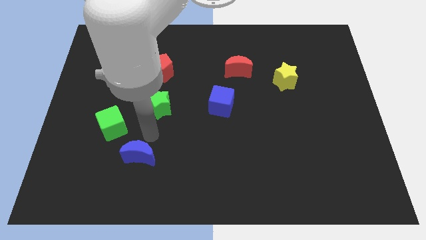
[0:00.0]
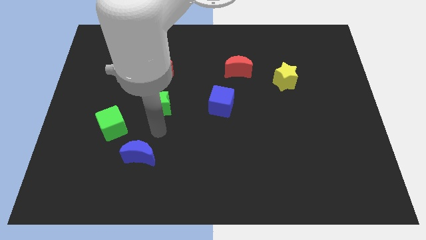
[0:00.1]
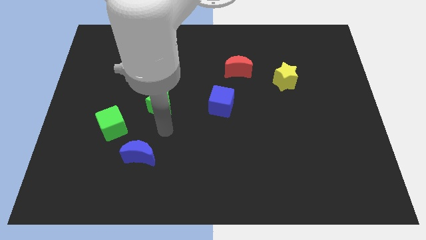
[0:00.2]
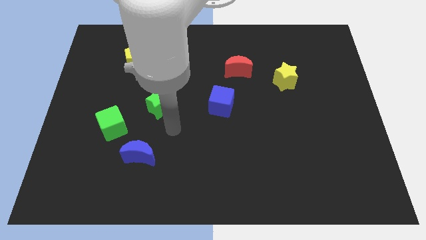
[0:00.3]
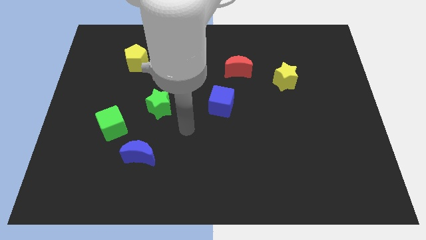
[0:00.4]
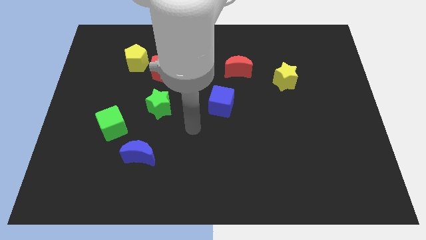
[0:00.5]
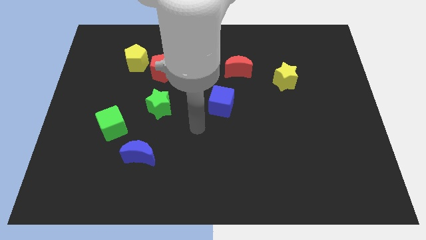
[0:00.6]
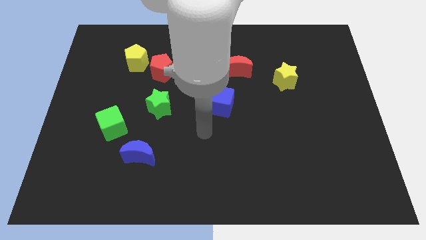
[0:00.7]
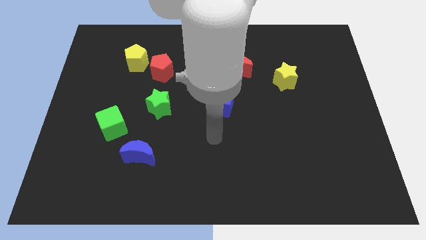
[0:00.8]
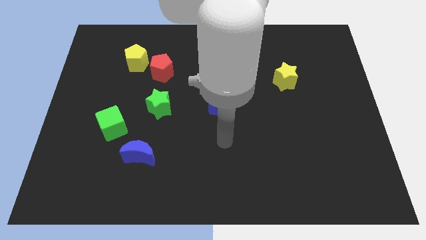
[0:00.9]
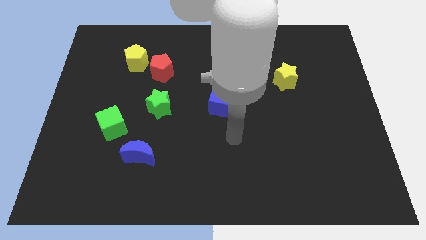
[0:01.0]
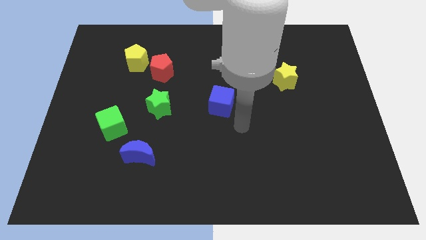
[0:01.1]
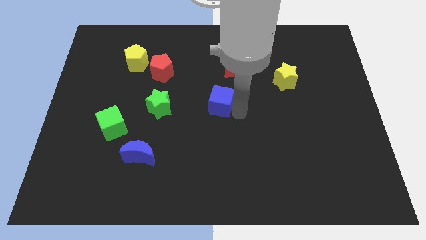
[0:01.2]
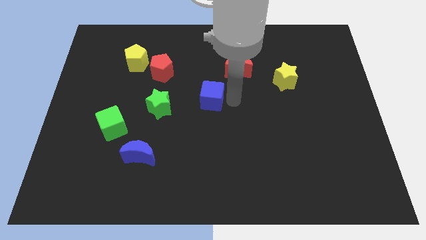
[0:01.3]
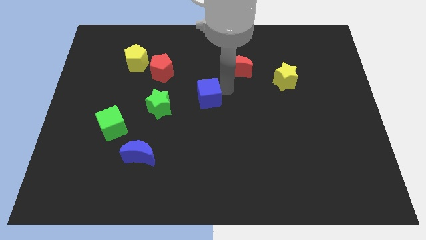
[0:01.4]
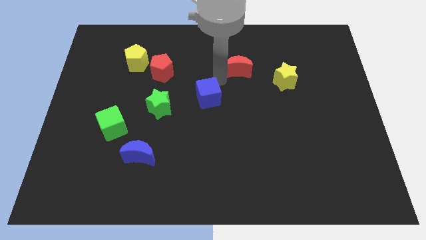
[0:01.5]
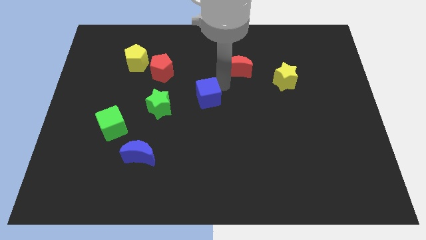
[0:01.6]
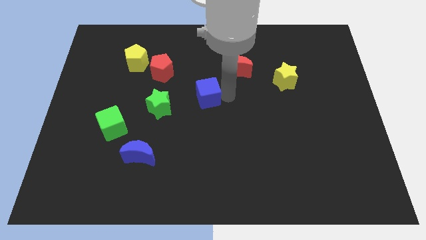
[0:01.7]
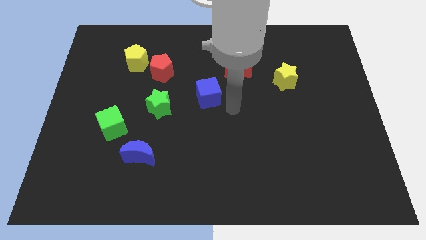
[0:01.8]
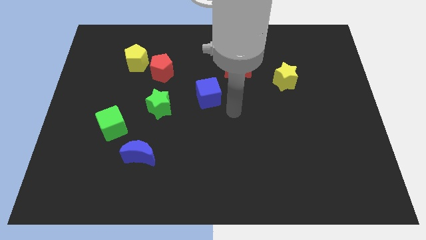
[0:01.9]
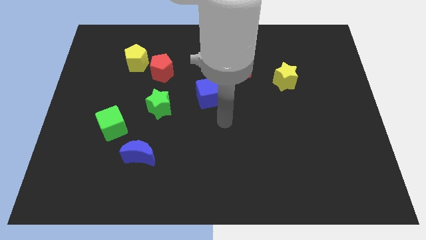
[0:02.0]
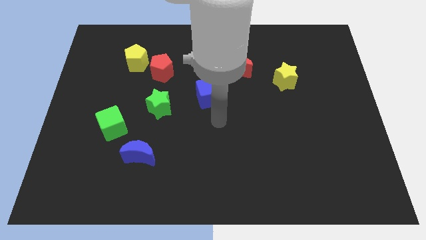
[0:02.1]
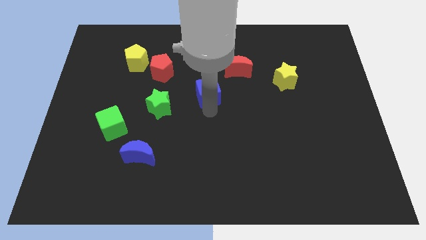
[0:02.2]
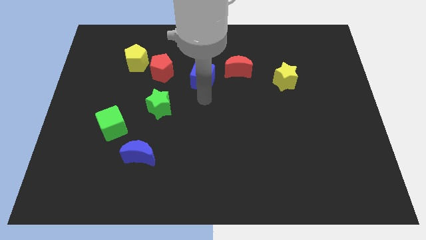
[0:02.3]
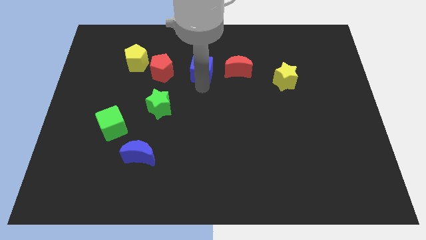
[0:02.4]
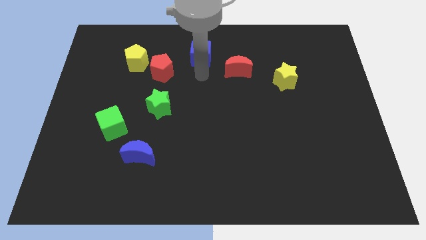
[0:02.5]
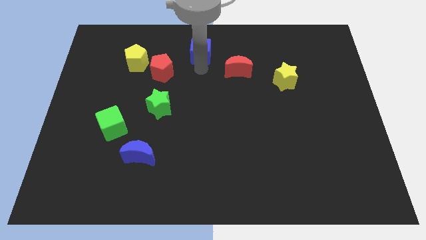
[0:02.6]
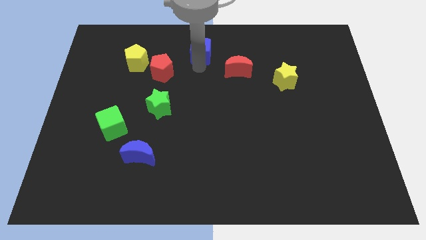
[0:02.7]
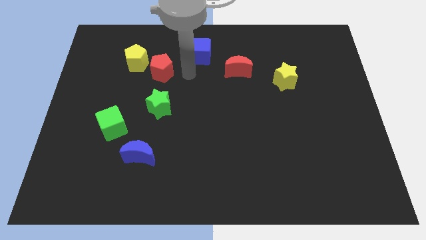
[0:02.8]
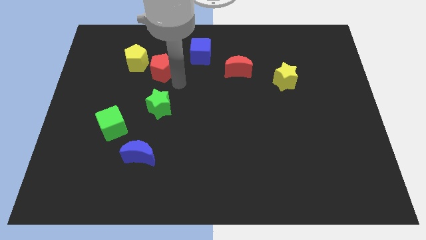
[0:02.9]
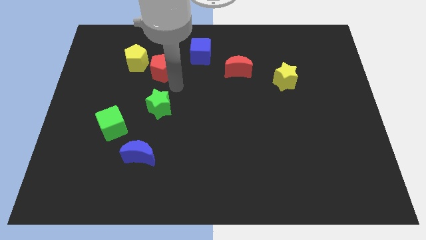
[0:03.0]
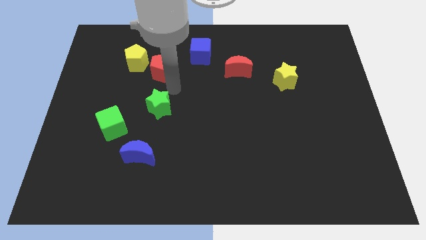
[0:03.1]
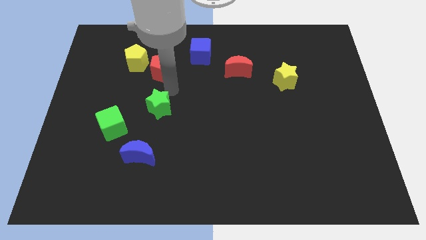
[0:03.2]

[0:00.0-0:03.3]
push the blue cube to the top center of the board

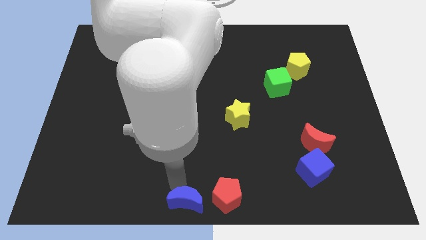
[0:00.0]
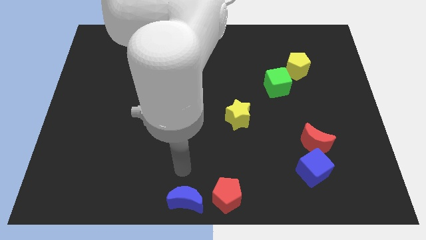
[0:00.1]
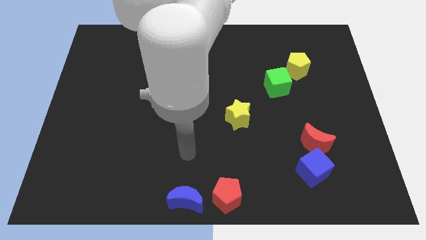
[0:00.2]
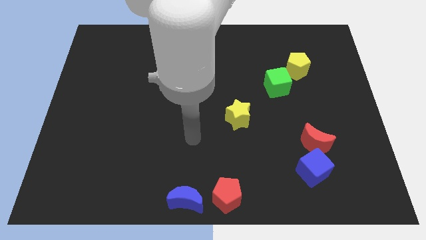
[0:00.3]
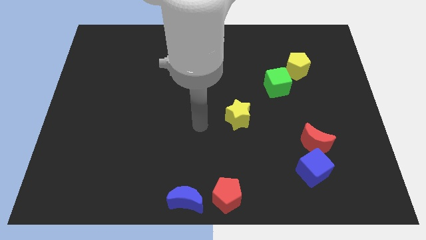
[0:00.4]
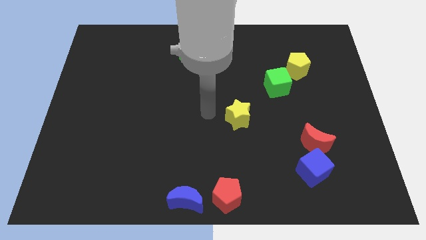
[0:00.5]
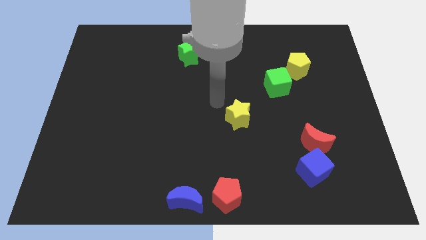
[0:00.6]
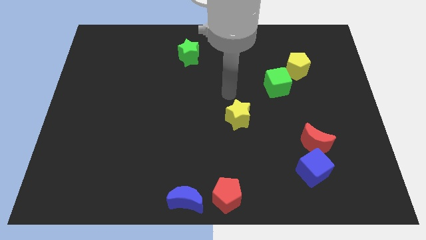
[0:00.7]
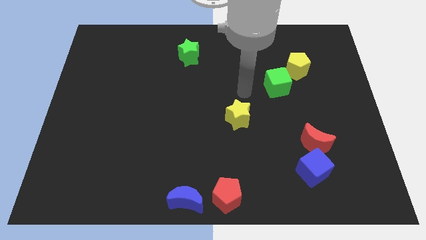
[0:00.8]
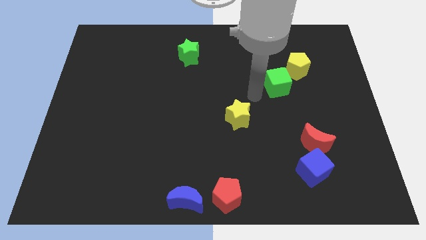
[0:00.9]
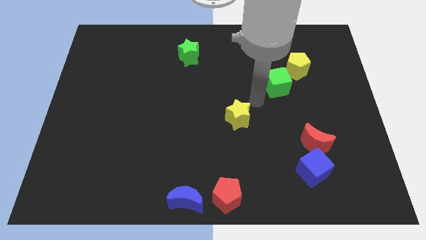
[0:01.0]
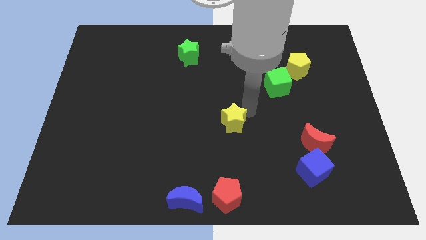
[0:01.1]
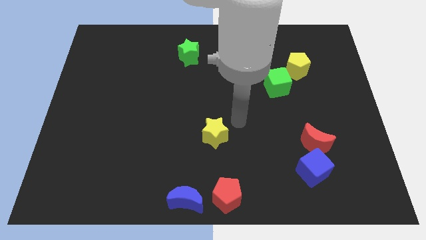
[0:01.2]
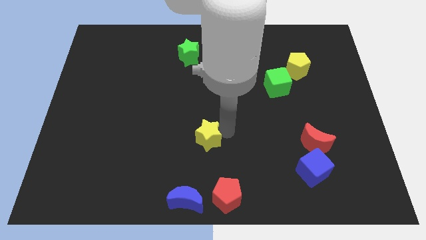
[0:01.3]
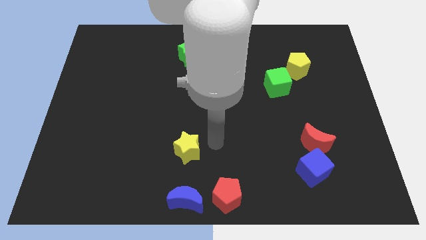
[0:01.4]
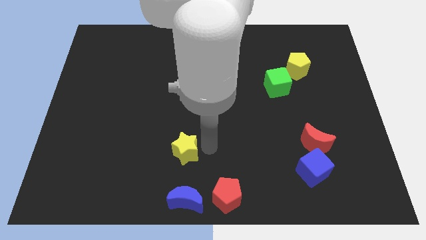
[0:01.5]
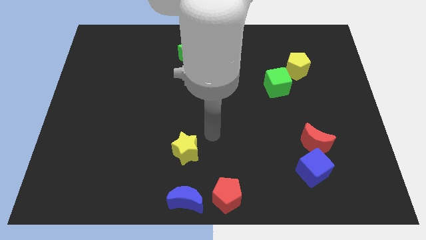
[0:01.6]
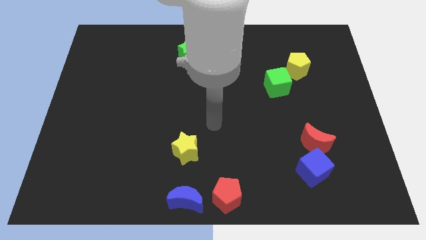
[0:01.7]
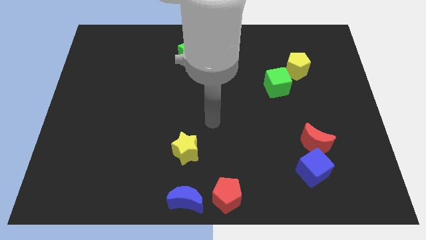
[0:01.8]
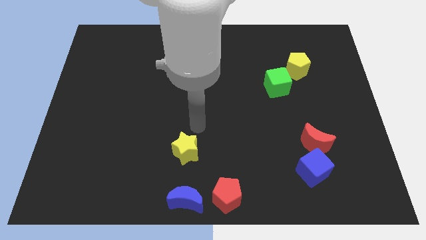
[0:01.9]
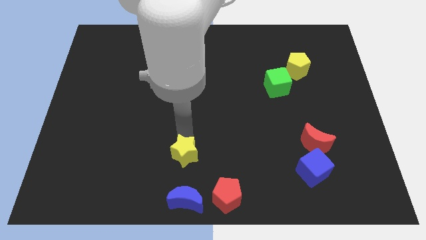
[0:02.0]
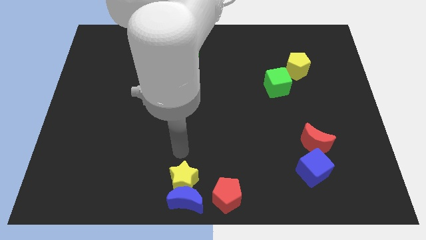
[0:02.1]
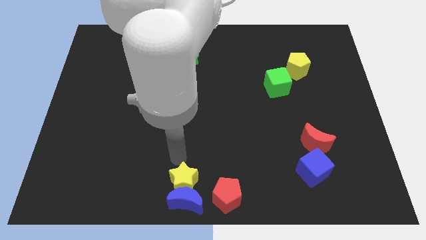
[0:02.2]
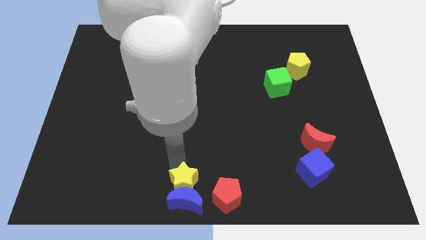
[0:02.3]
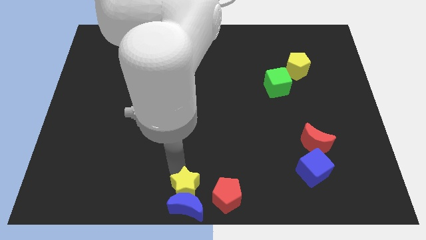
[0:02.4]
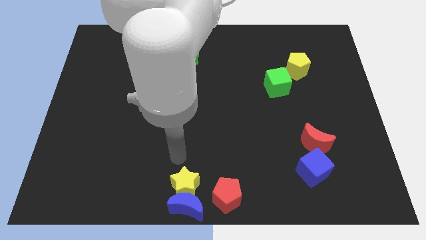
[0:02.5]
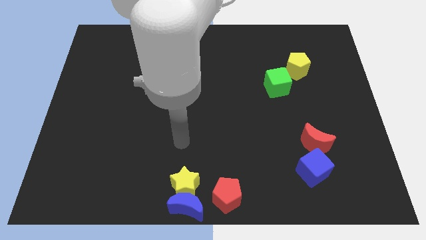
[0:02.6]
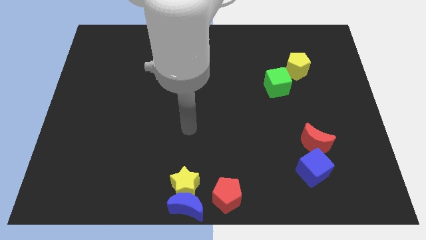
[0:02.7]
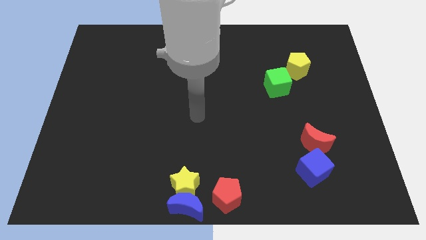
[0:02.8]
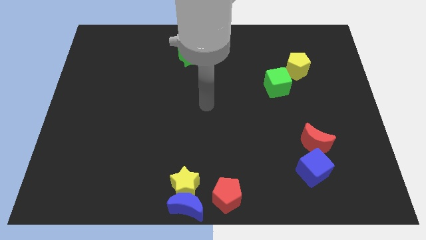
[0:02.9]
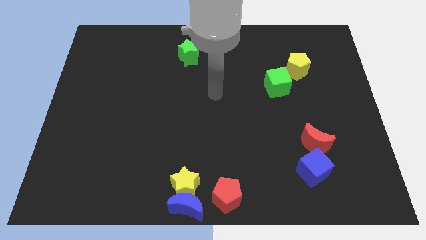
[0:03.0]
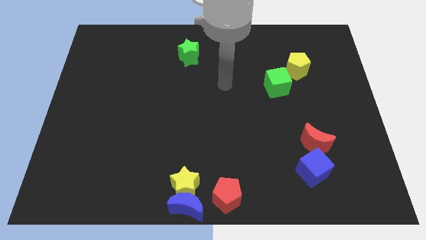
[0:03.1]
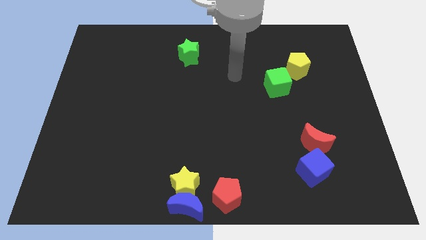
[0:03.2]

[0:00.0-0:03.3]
place the yellow star at the top of blue moon

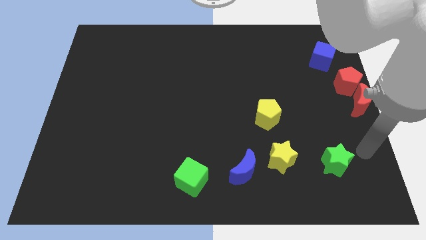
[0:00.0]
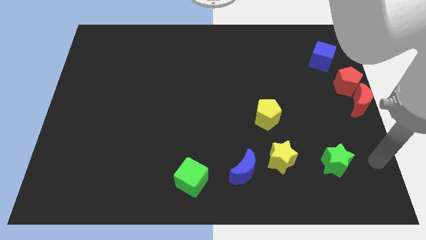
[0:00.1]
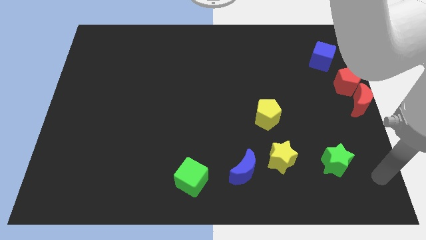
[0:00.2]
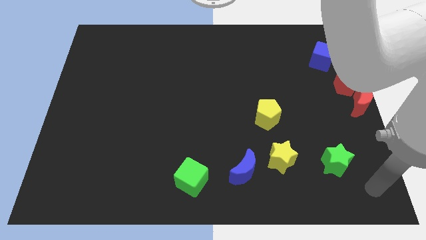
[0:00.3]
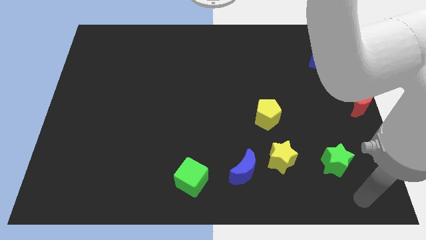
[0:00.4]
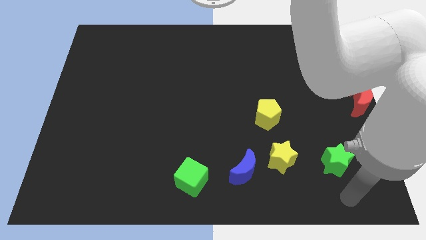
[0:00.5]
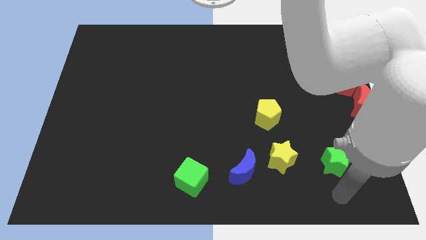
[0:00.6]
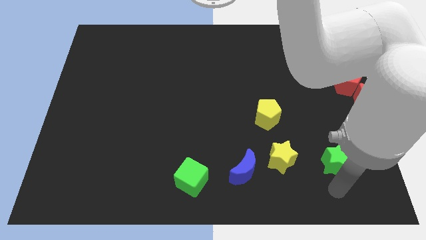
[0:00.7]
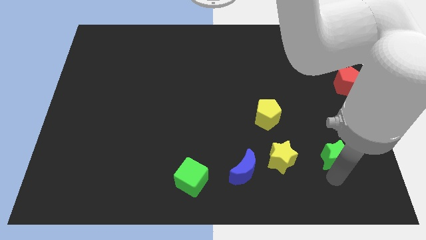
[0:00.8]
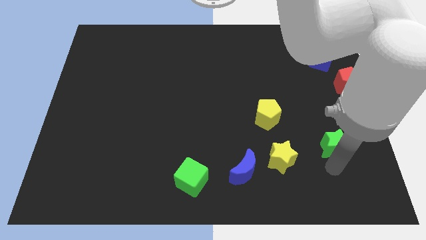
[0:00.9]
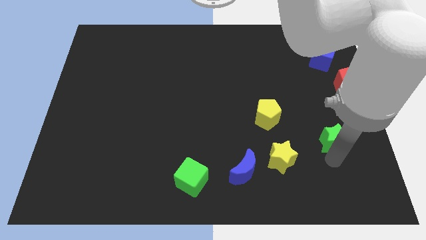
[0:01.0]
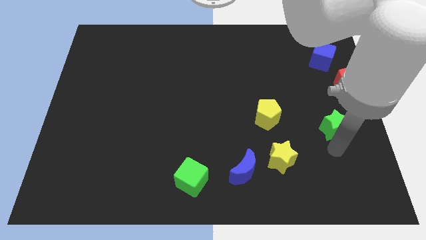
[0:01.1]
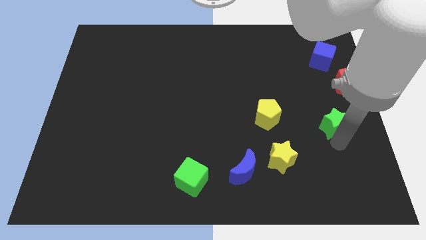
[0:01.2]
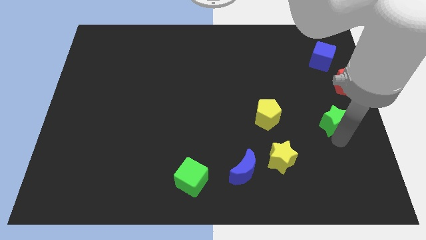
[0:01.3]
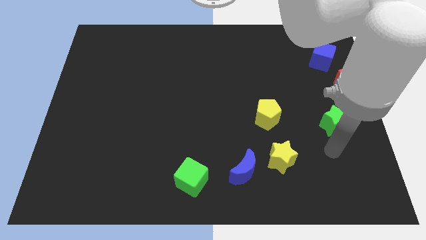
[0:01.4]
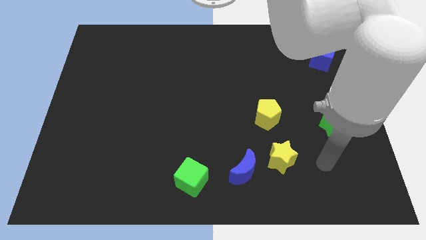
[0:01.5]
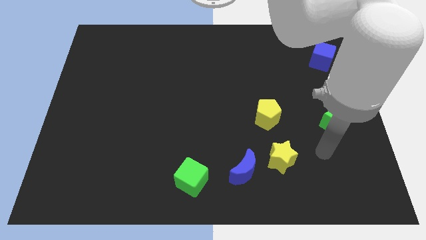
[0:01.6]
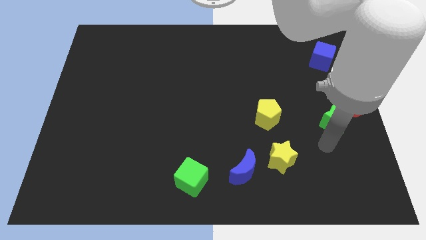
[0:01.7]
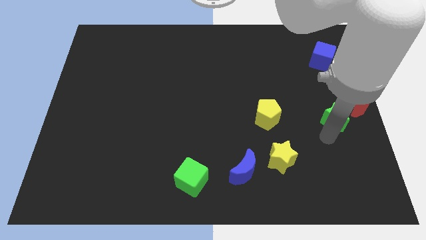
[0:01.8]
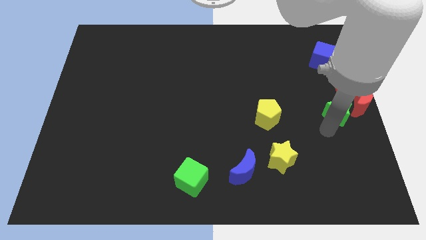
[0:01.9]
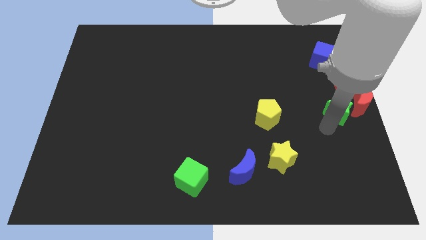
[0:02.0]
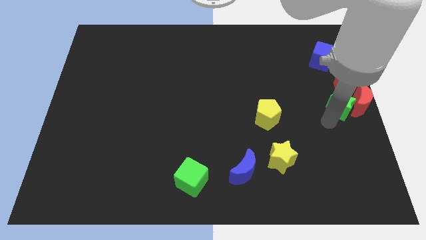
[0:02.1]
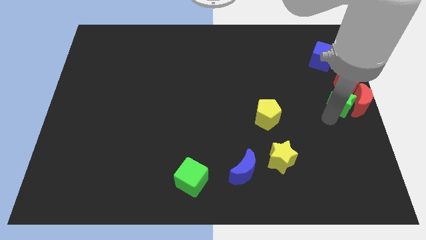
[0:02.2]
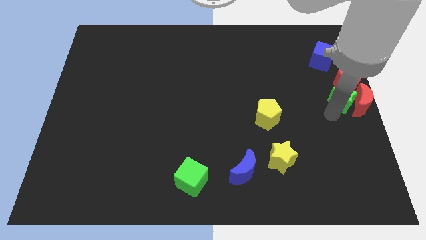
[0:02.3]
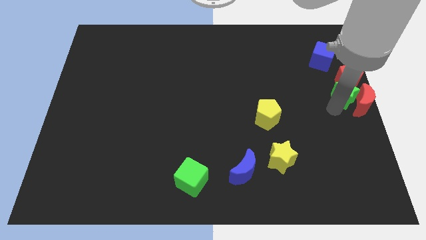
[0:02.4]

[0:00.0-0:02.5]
move the green star to the bottom of the red pentagon
